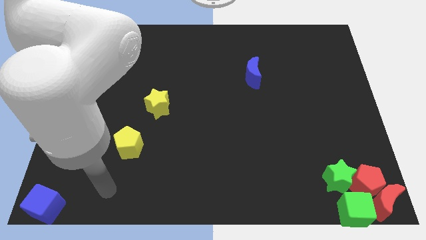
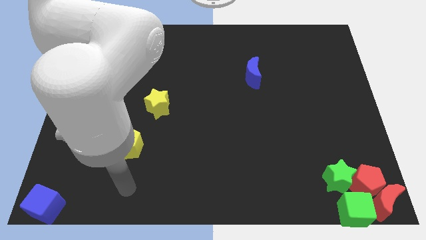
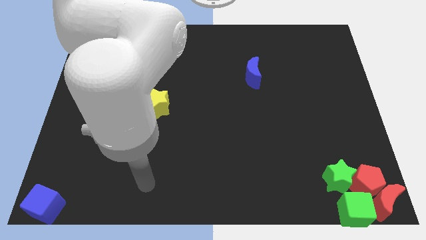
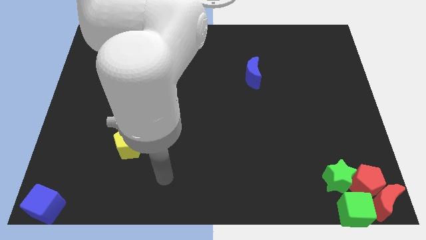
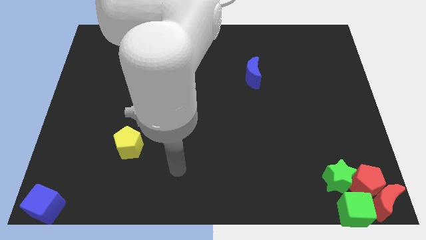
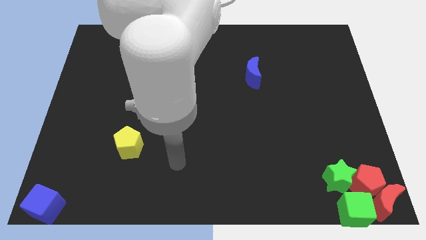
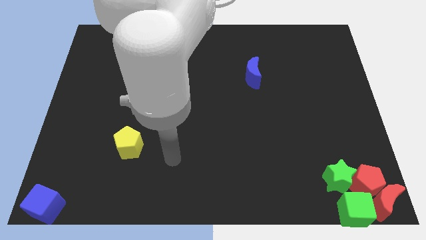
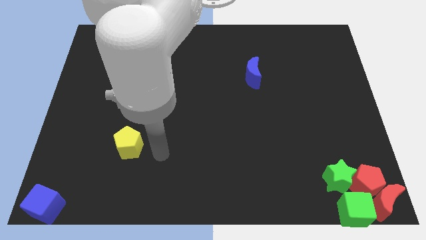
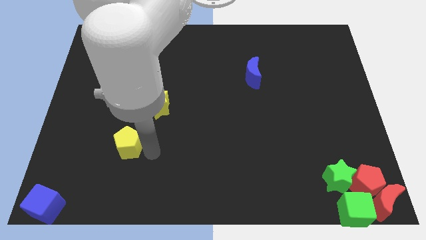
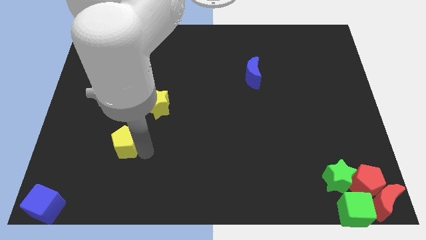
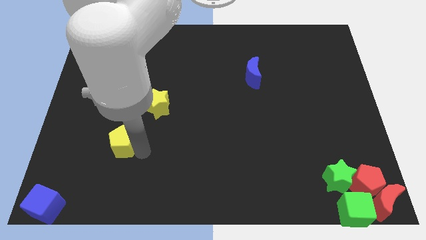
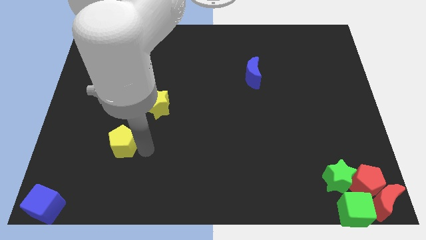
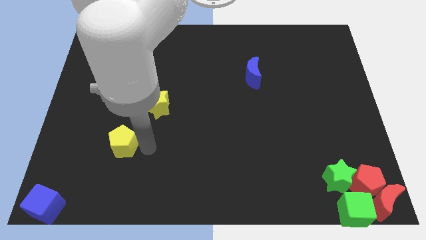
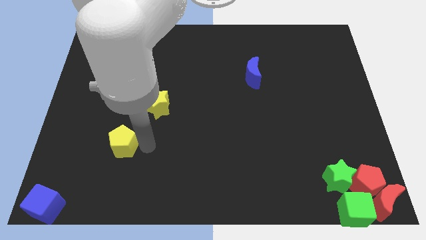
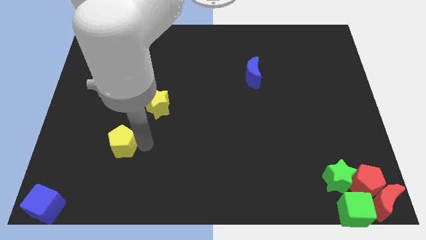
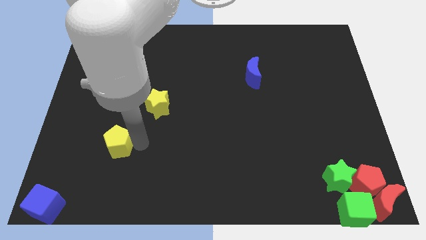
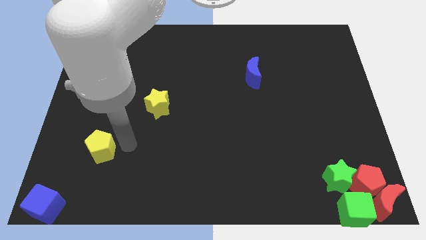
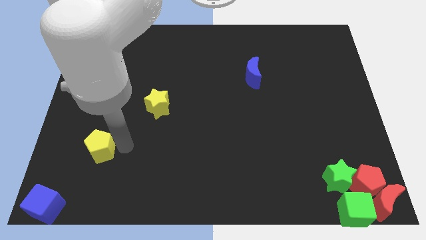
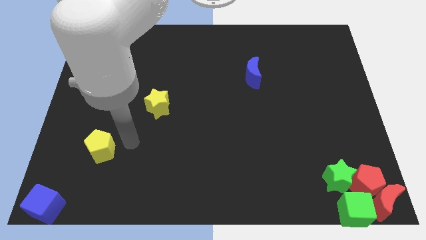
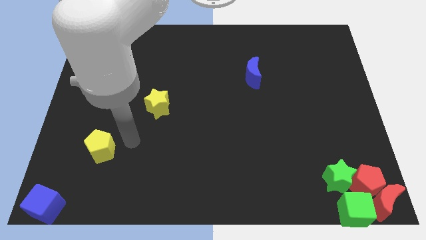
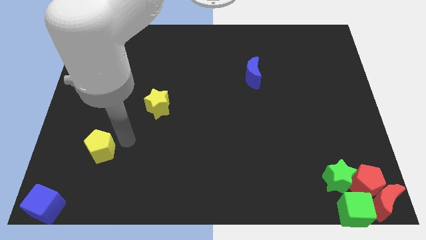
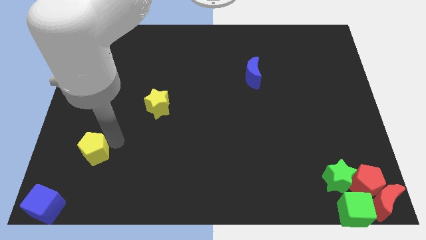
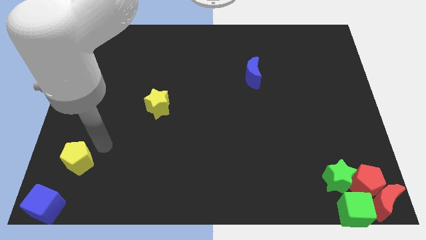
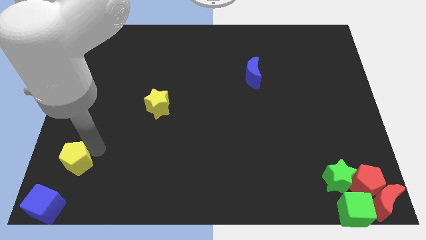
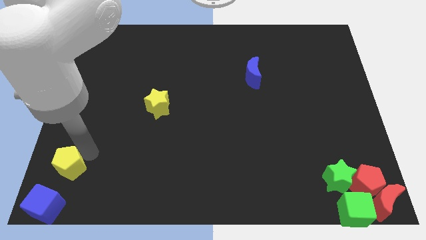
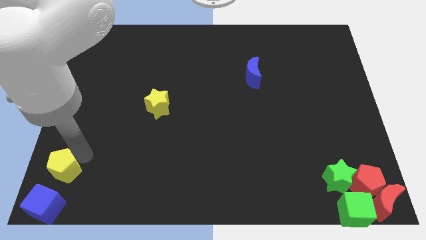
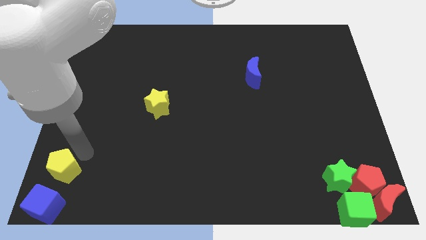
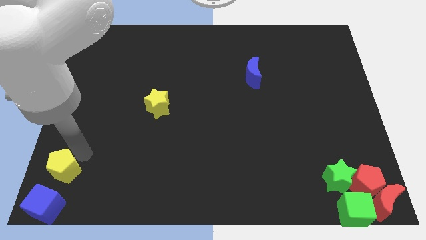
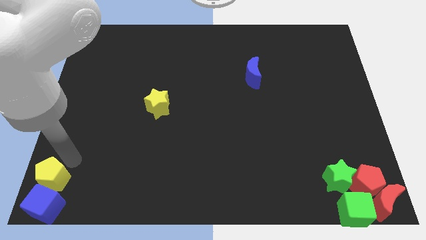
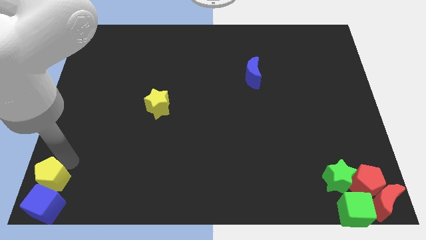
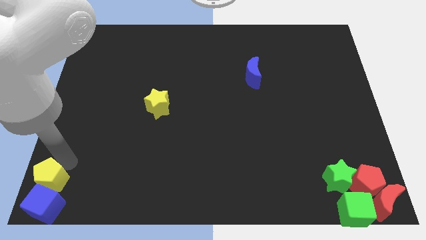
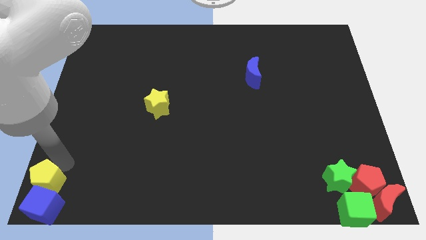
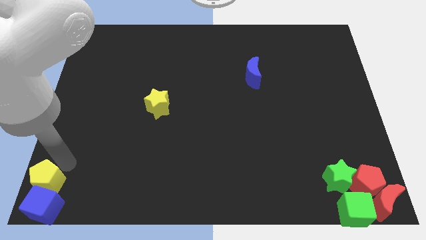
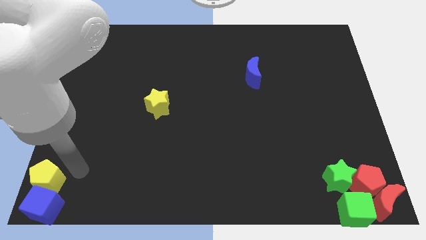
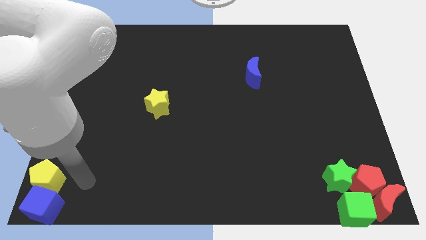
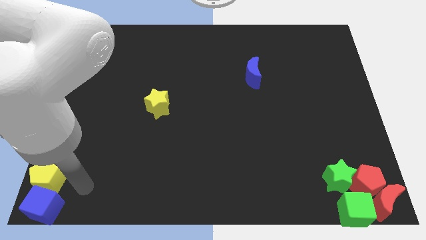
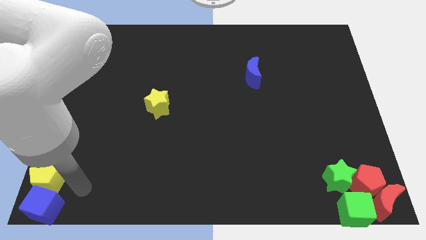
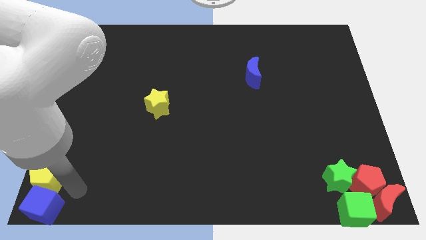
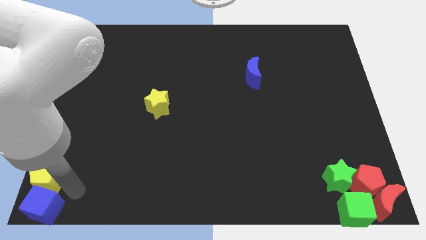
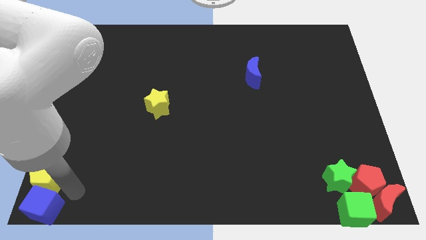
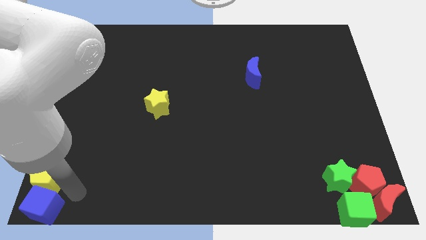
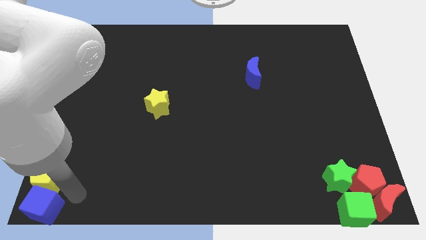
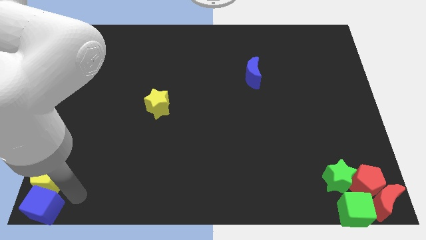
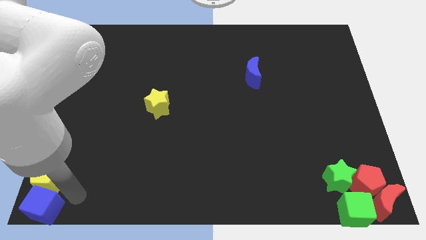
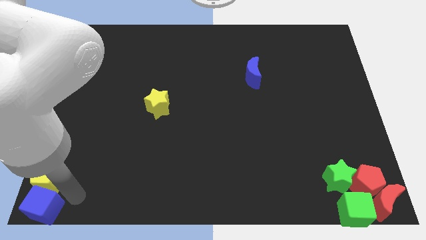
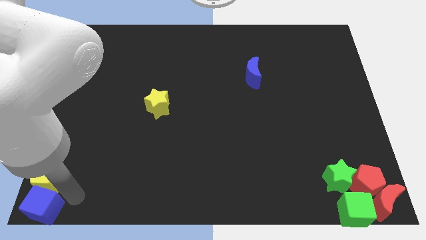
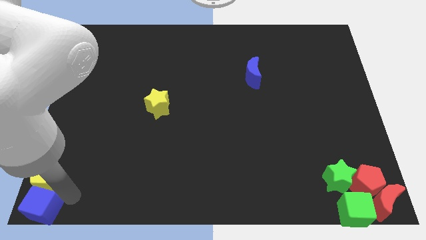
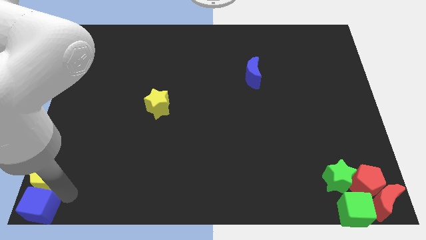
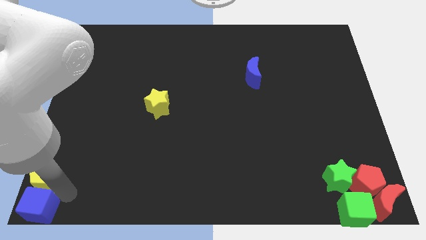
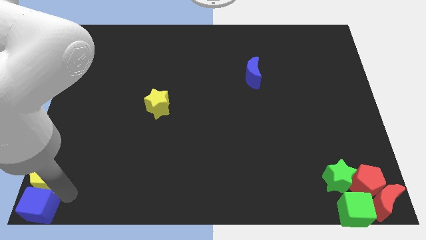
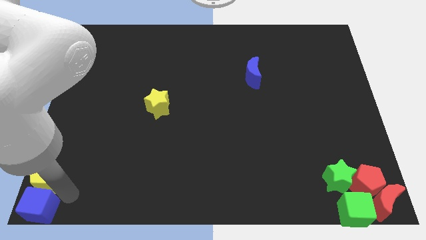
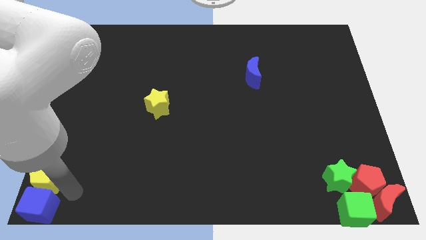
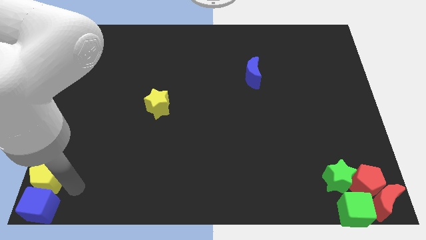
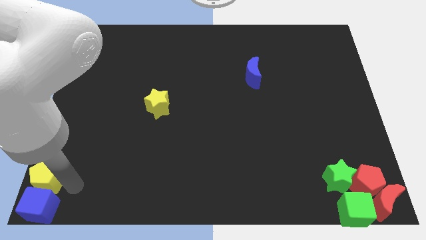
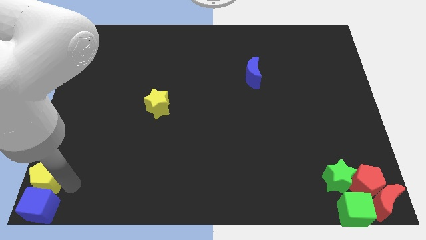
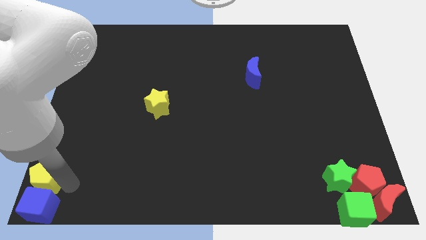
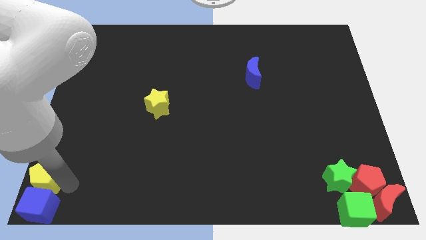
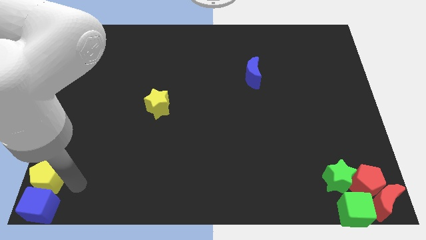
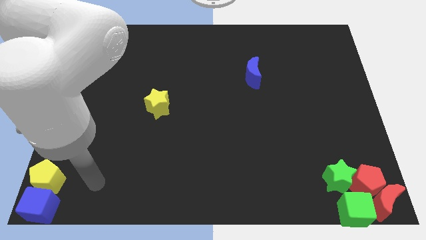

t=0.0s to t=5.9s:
move yellow pentagon above blue cube

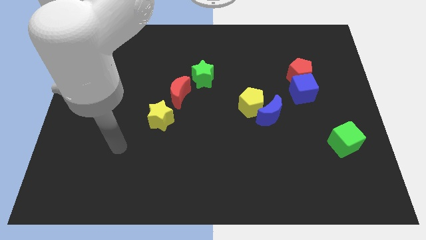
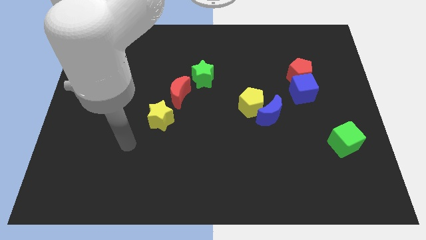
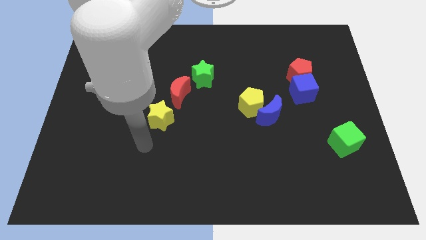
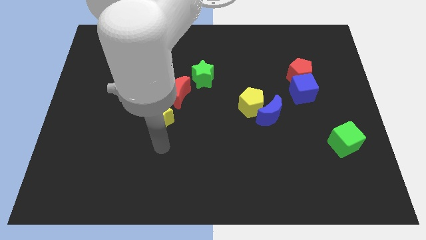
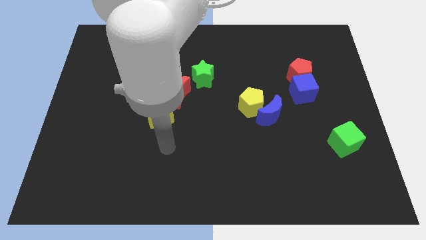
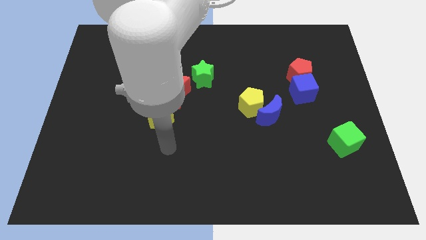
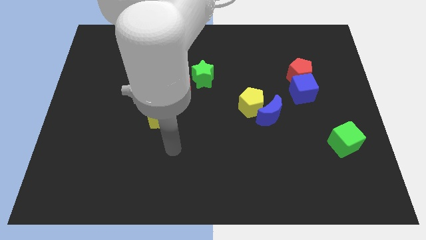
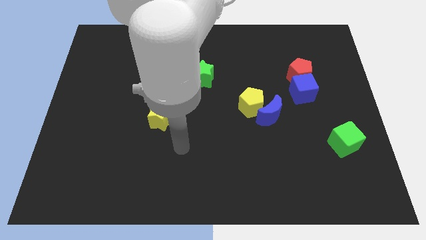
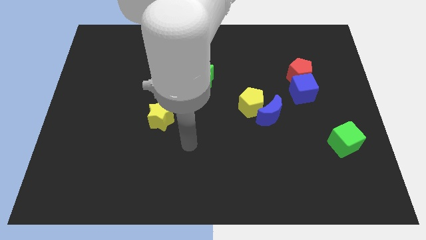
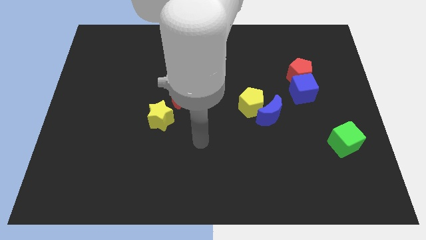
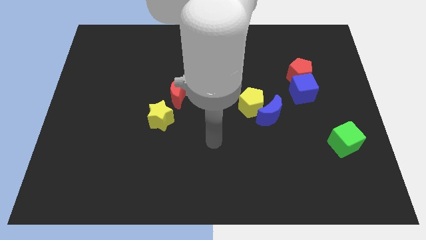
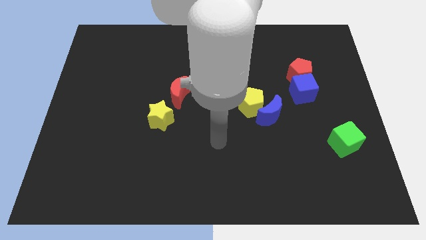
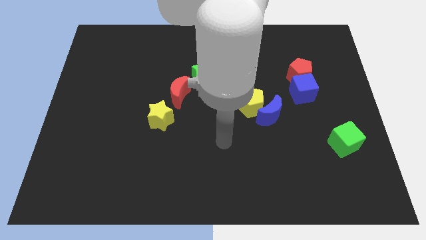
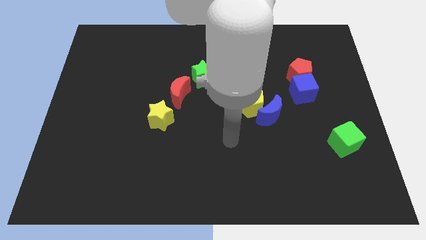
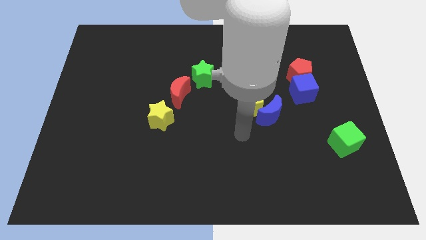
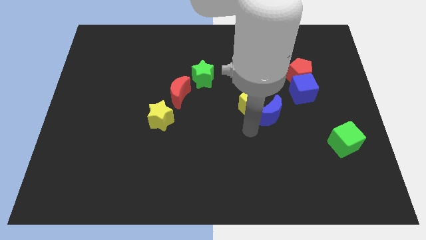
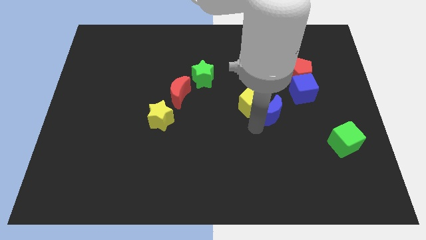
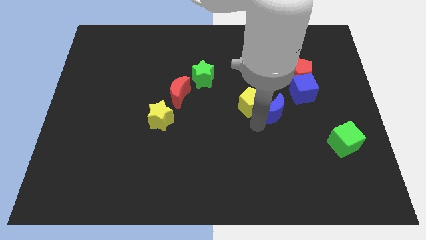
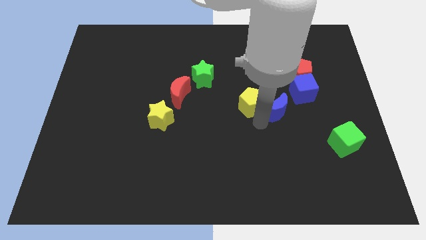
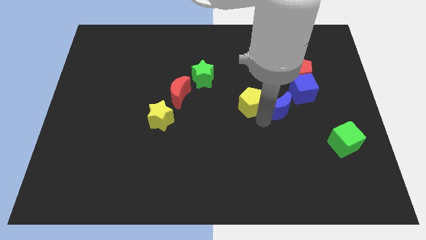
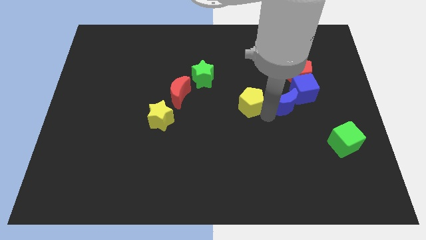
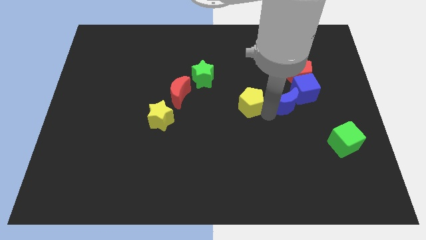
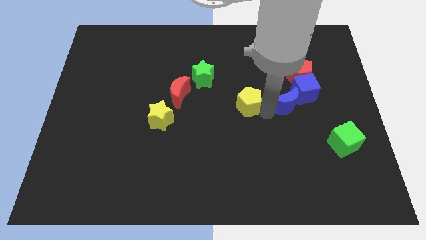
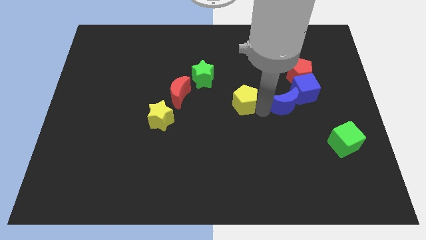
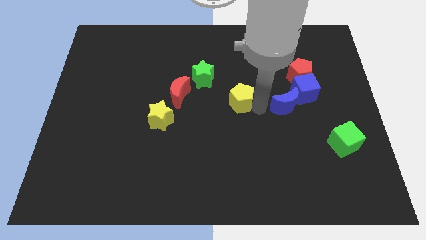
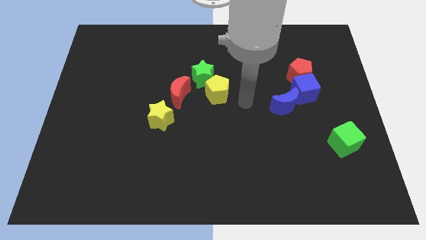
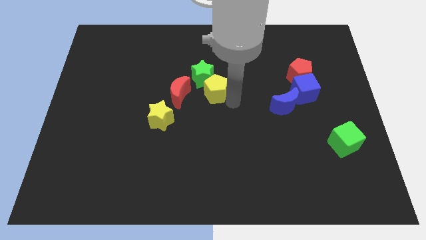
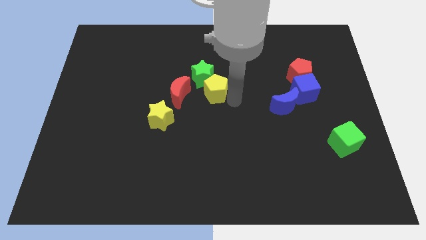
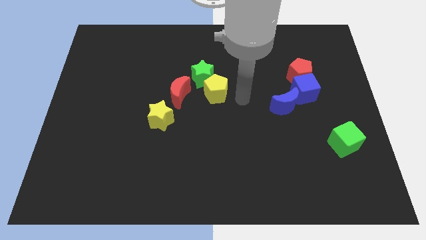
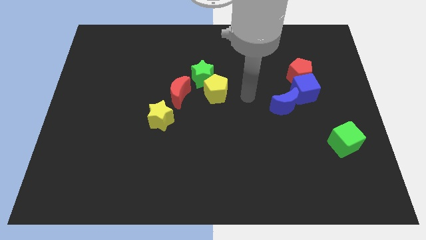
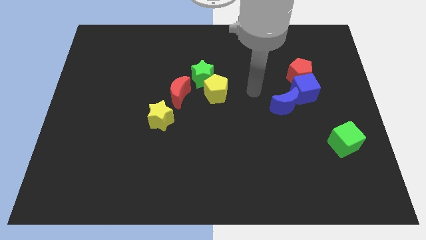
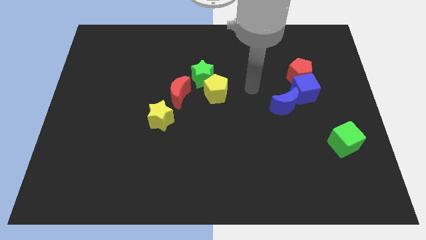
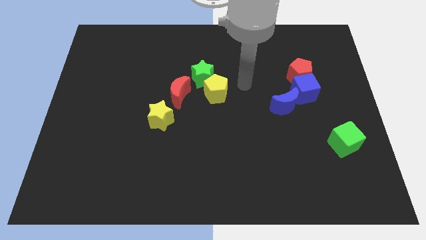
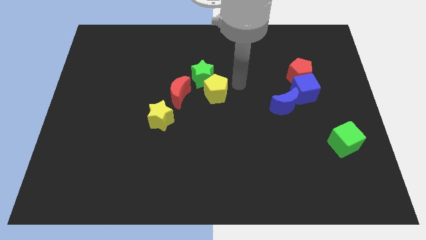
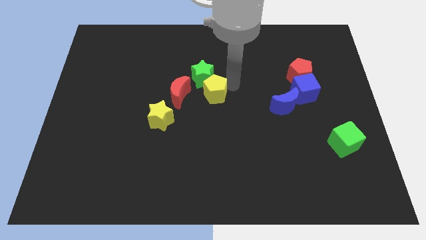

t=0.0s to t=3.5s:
separate the yellow pentagon from blue crescent
